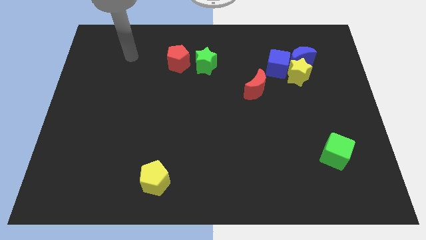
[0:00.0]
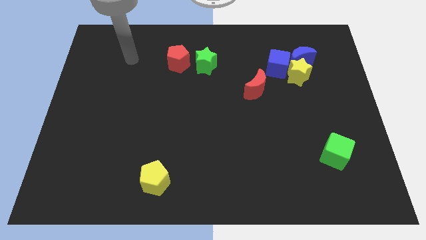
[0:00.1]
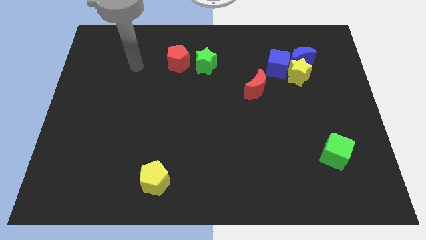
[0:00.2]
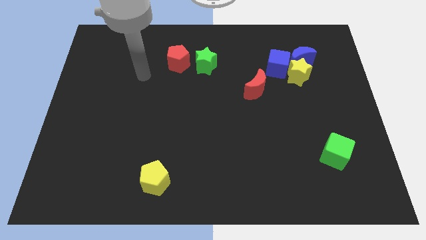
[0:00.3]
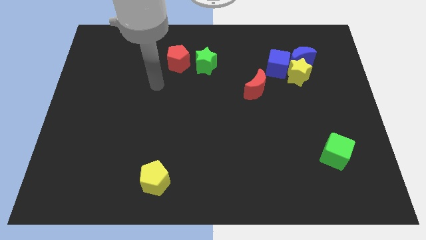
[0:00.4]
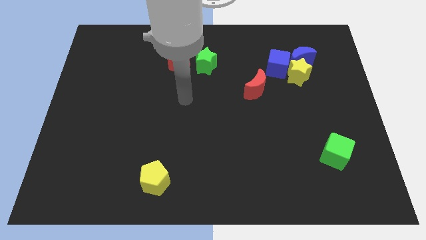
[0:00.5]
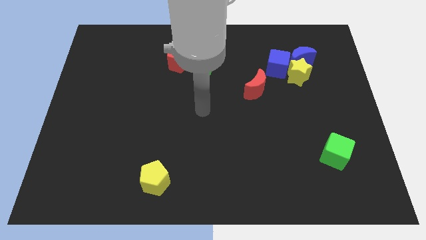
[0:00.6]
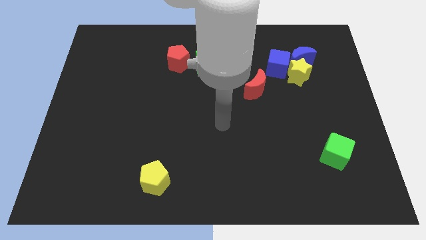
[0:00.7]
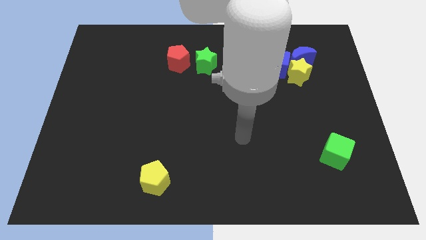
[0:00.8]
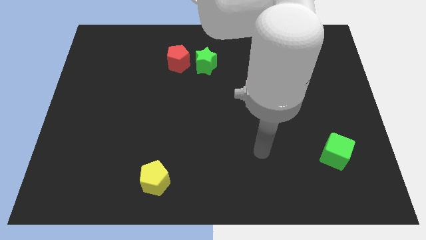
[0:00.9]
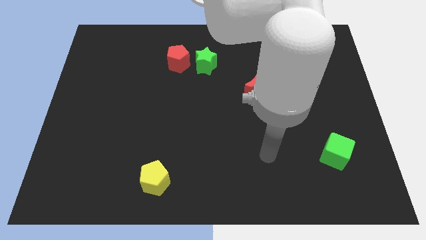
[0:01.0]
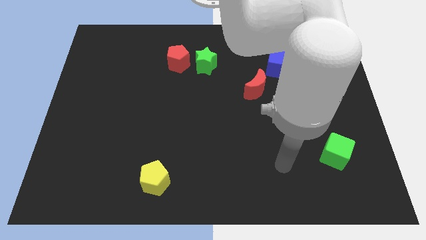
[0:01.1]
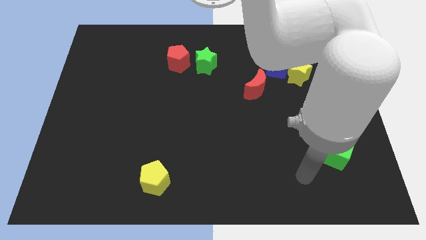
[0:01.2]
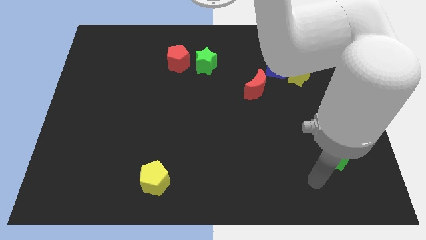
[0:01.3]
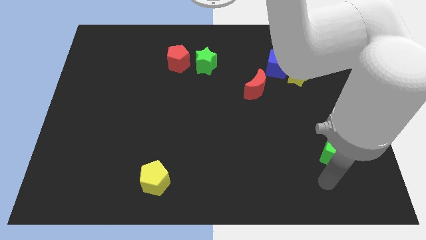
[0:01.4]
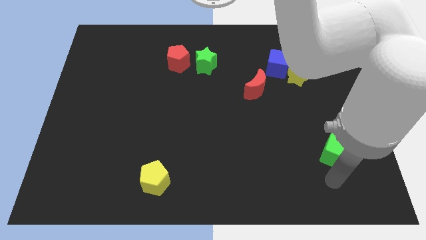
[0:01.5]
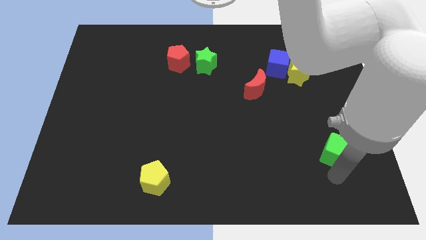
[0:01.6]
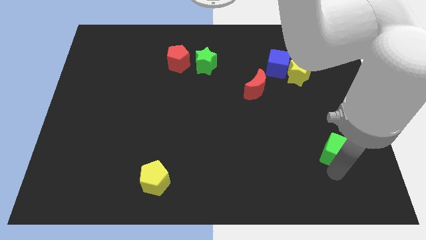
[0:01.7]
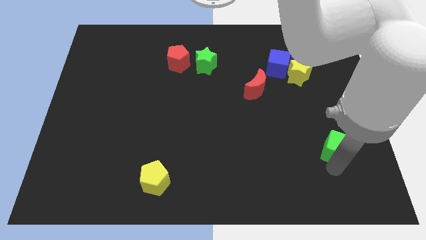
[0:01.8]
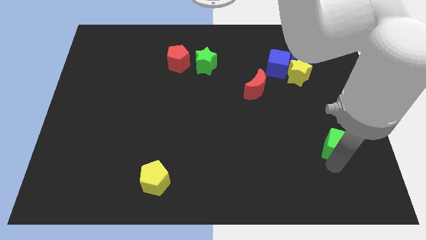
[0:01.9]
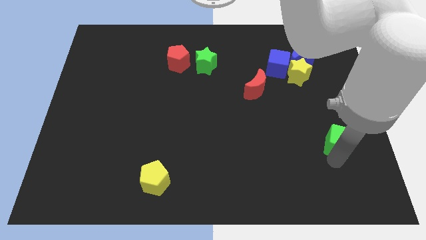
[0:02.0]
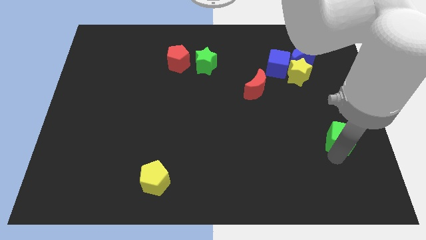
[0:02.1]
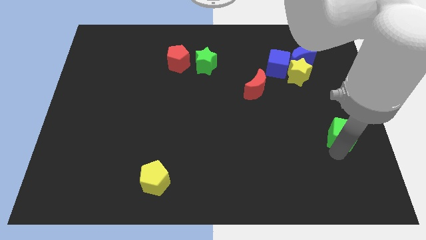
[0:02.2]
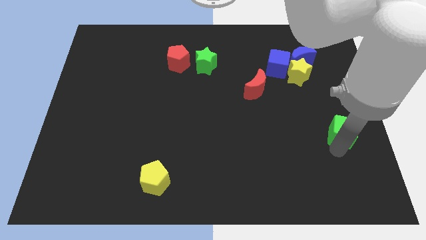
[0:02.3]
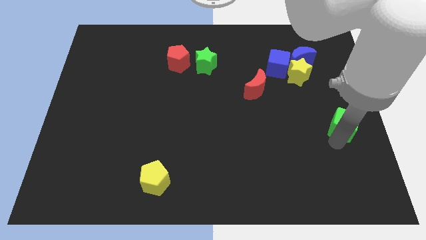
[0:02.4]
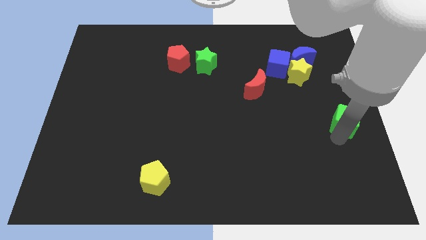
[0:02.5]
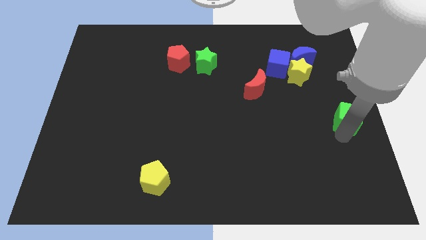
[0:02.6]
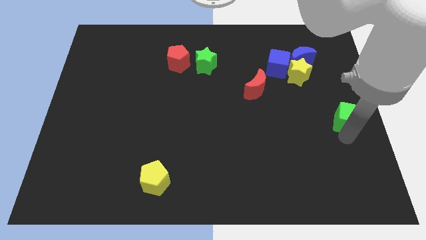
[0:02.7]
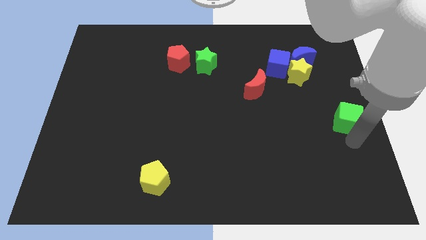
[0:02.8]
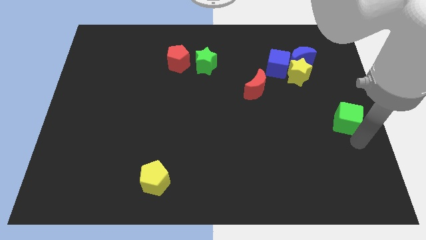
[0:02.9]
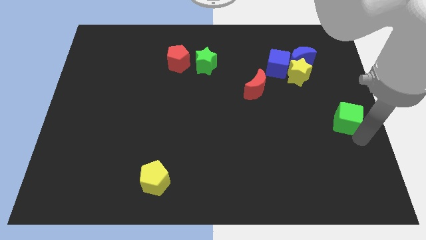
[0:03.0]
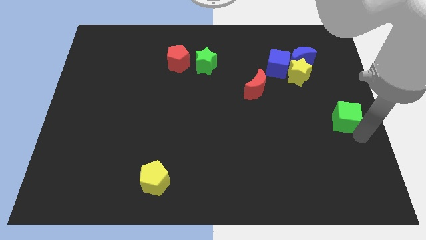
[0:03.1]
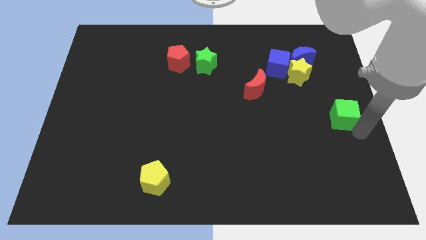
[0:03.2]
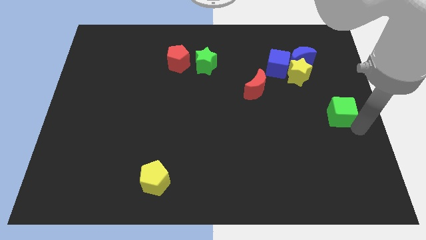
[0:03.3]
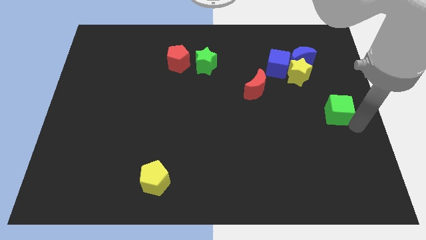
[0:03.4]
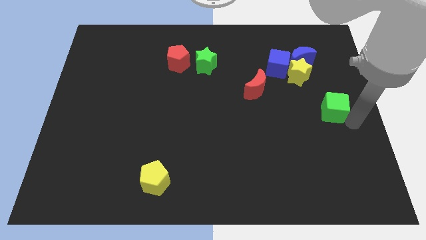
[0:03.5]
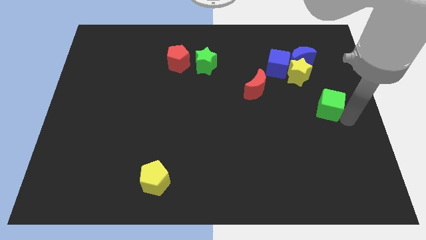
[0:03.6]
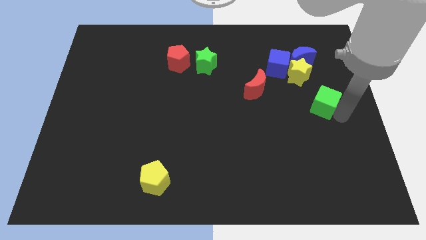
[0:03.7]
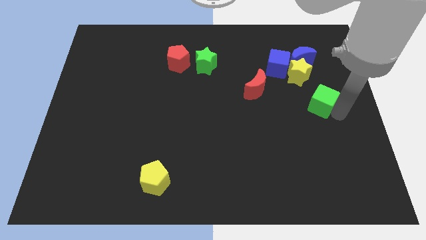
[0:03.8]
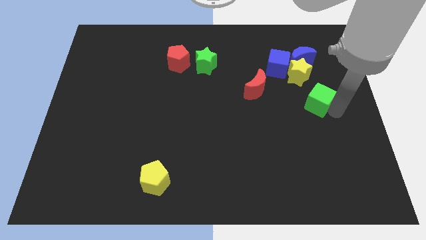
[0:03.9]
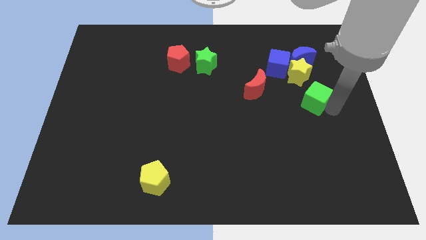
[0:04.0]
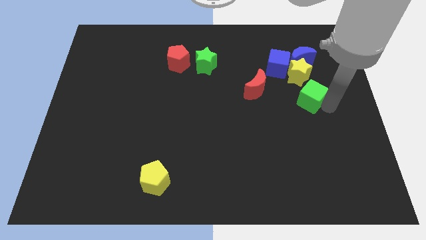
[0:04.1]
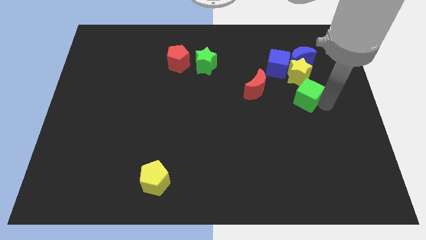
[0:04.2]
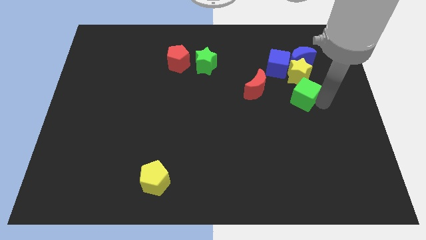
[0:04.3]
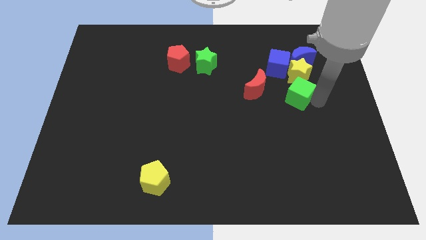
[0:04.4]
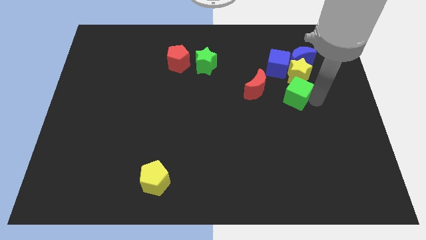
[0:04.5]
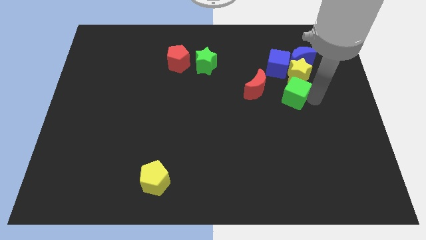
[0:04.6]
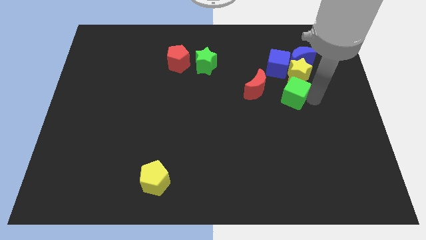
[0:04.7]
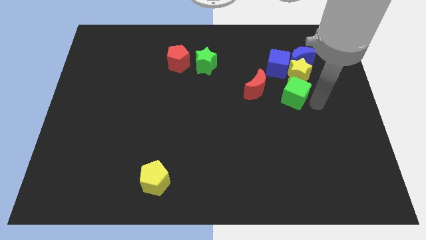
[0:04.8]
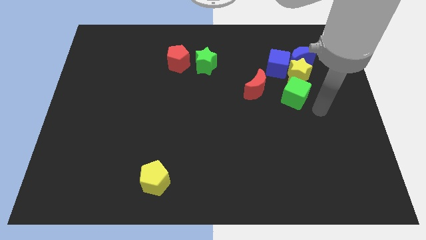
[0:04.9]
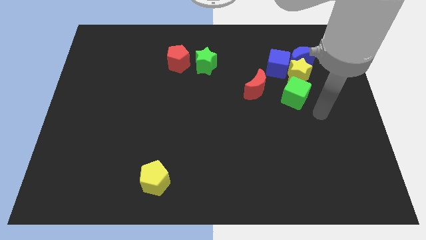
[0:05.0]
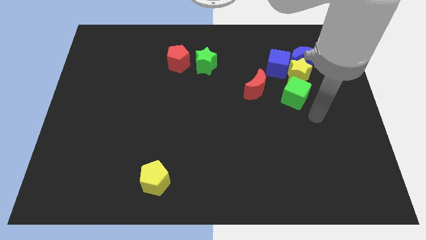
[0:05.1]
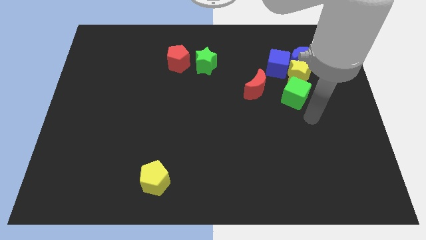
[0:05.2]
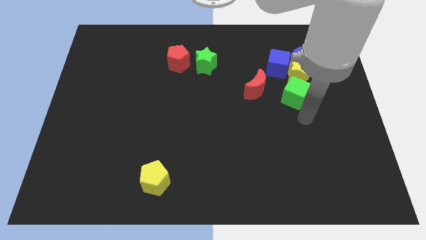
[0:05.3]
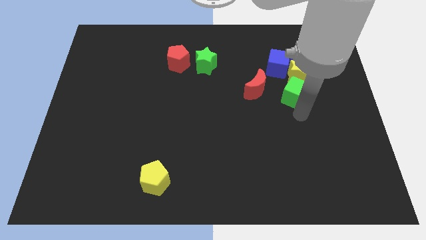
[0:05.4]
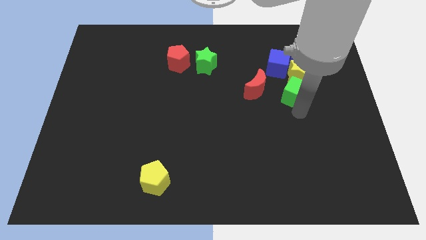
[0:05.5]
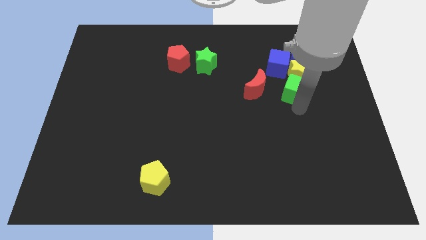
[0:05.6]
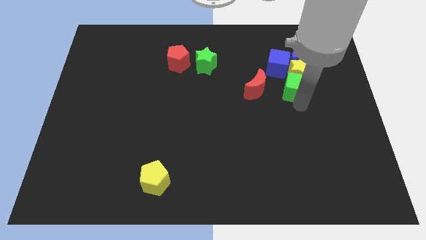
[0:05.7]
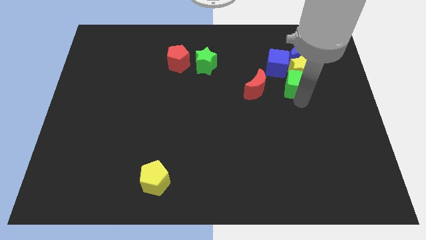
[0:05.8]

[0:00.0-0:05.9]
move the green cube close to the yellow star

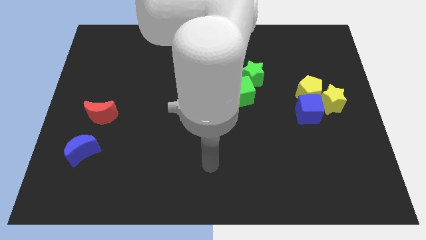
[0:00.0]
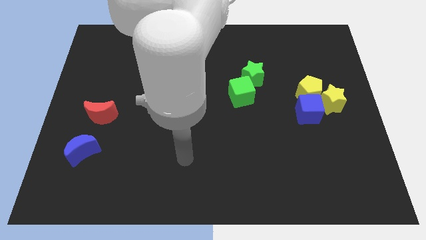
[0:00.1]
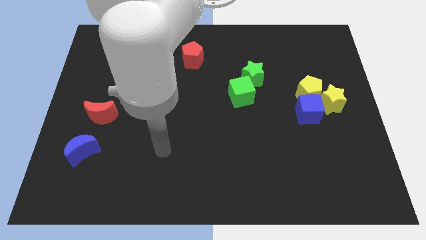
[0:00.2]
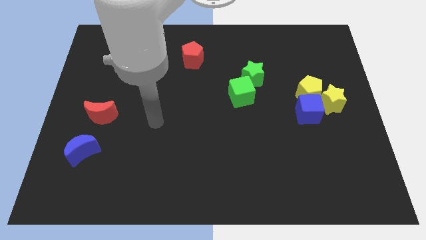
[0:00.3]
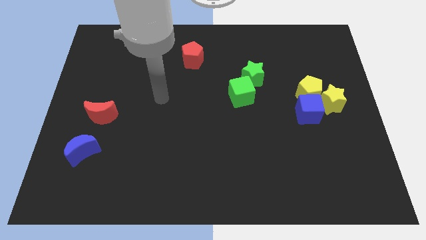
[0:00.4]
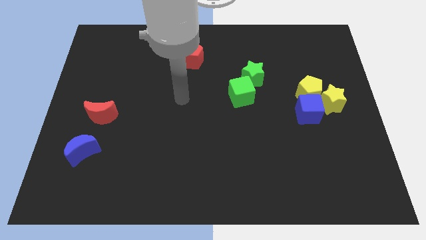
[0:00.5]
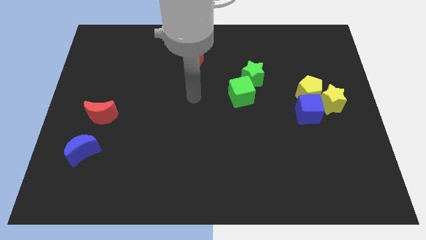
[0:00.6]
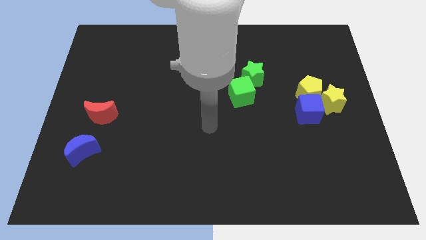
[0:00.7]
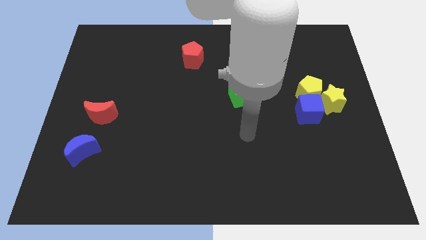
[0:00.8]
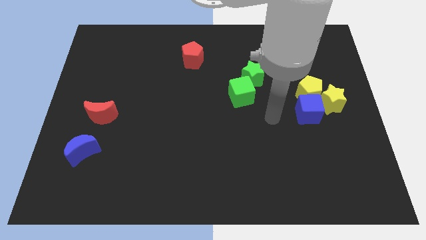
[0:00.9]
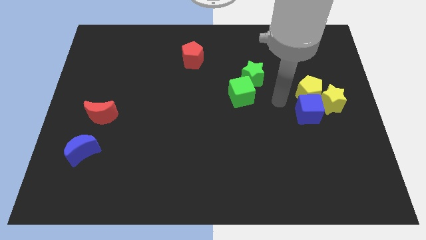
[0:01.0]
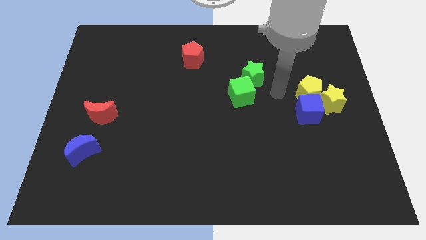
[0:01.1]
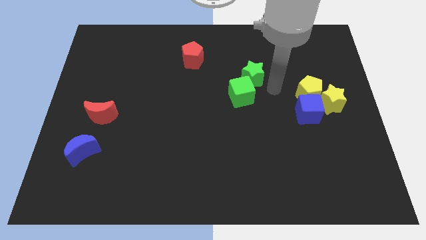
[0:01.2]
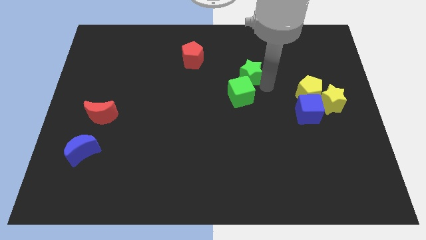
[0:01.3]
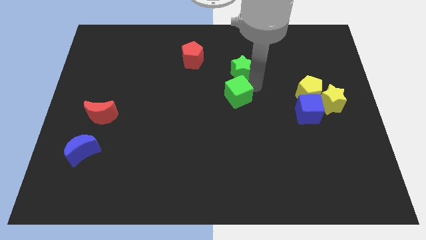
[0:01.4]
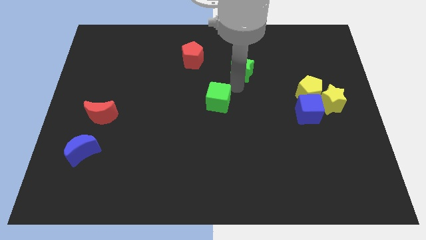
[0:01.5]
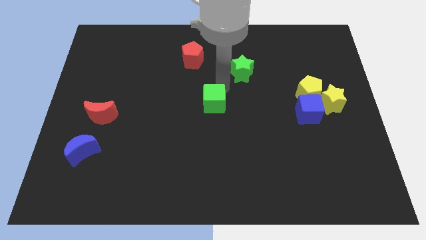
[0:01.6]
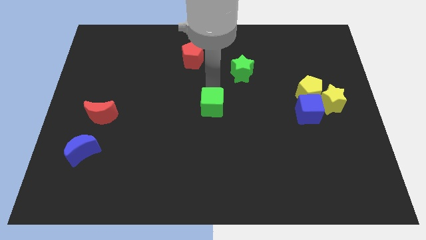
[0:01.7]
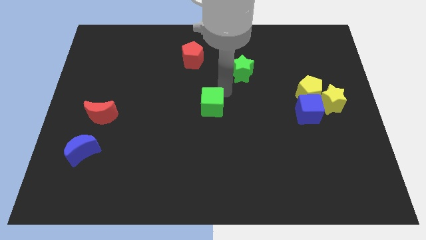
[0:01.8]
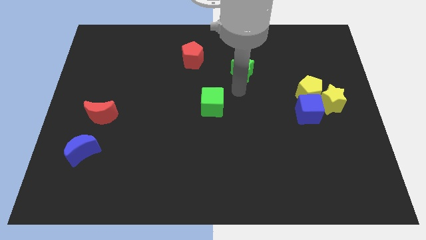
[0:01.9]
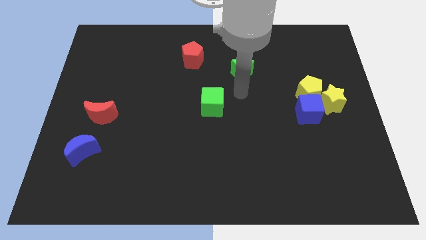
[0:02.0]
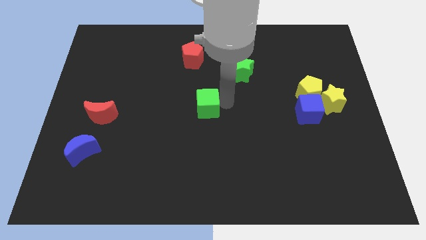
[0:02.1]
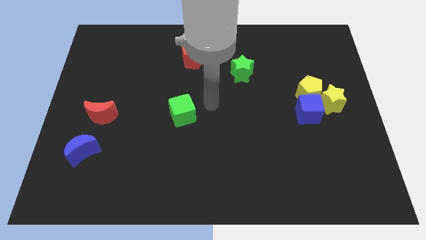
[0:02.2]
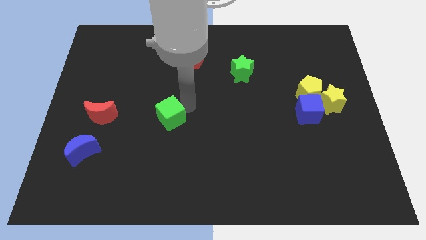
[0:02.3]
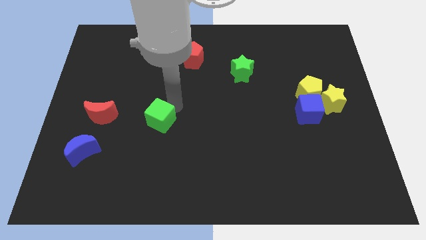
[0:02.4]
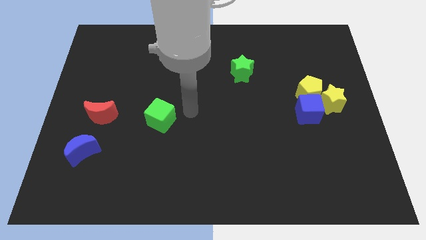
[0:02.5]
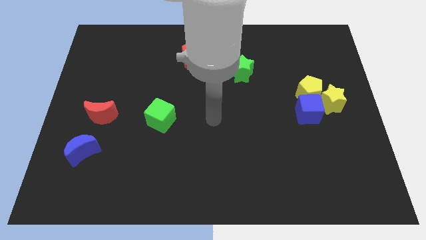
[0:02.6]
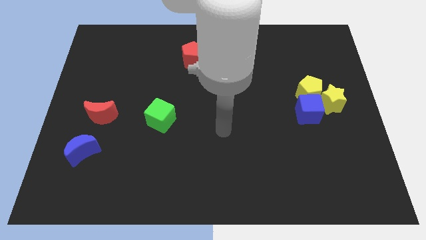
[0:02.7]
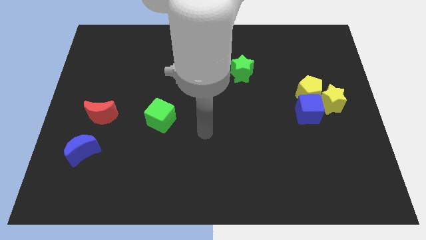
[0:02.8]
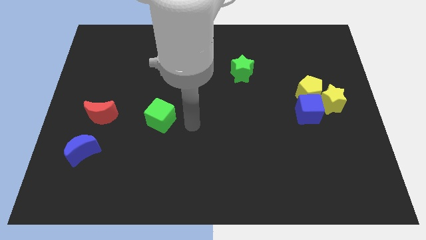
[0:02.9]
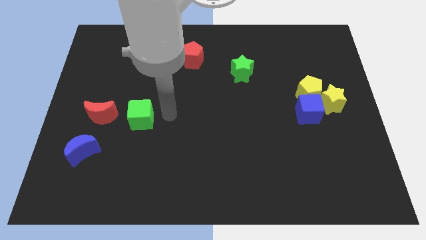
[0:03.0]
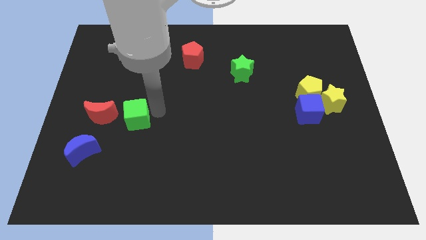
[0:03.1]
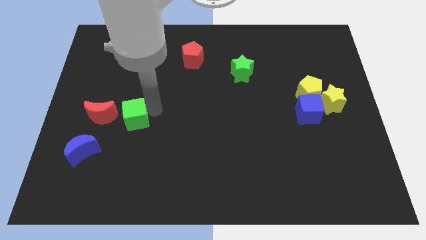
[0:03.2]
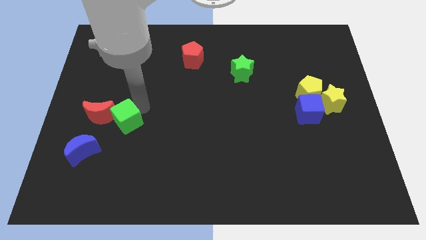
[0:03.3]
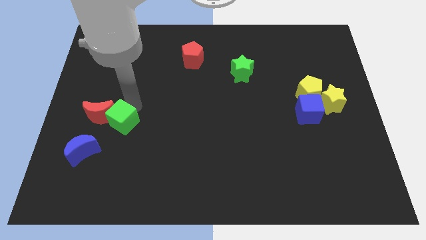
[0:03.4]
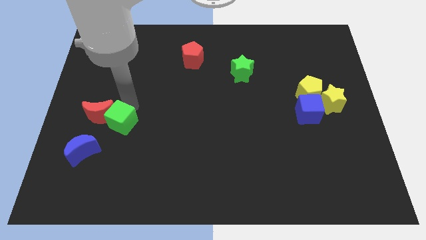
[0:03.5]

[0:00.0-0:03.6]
slide the green cube close to the red moon
